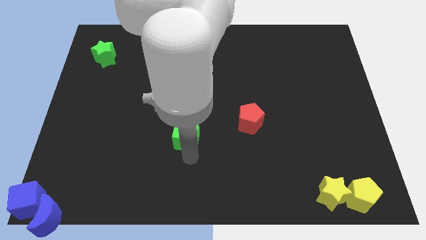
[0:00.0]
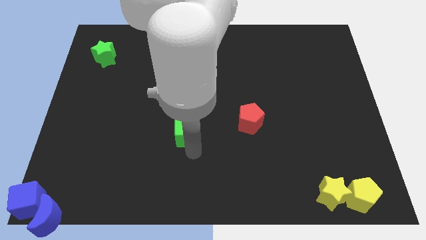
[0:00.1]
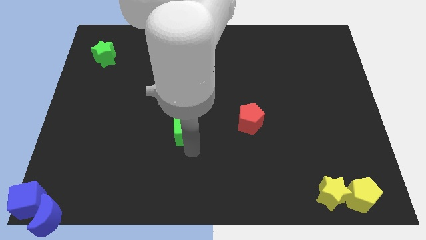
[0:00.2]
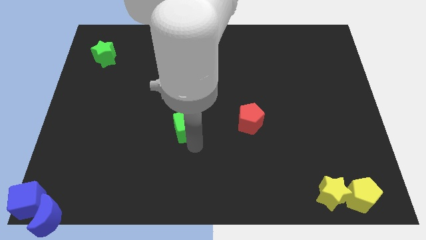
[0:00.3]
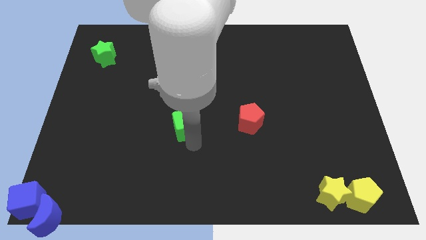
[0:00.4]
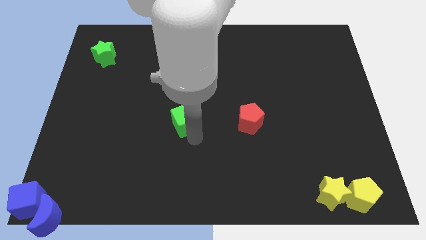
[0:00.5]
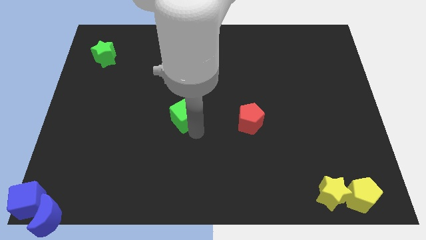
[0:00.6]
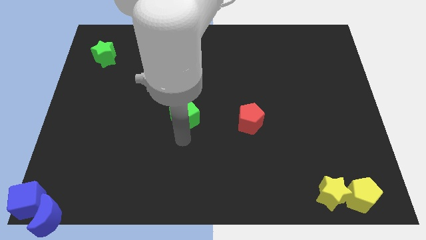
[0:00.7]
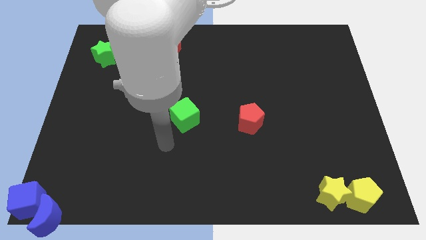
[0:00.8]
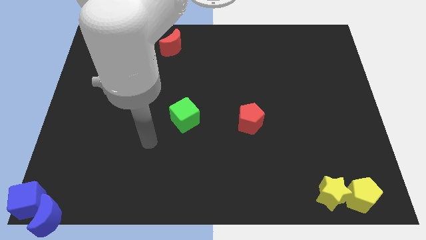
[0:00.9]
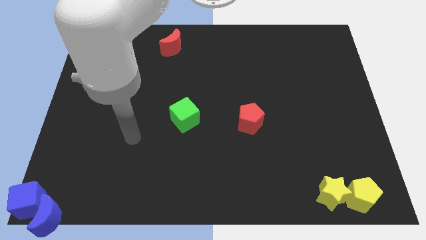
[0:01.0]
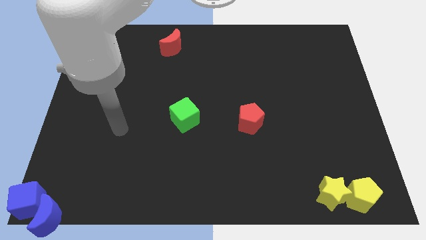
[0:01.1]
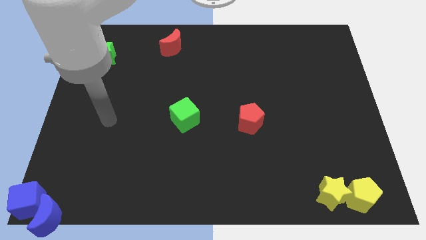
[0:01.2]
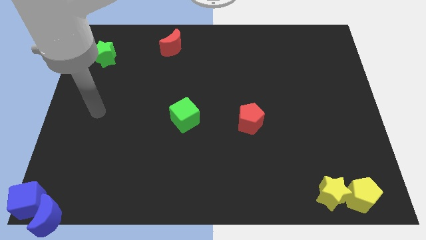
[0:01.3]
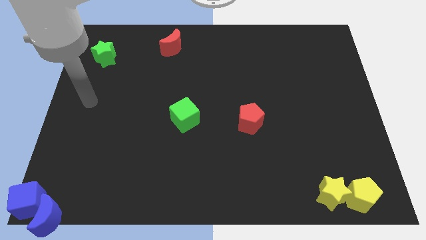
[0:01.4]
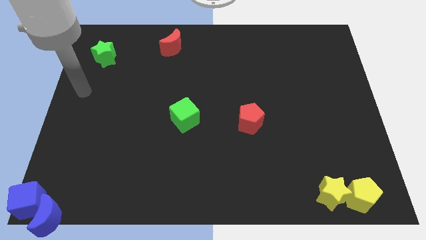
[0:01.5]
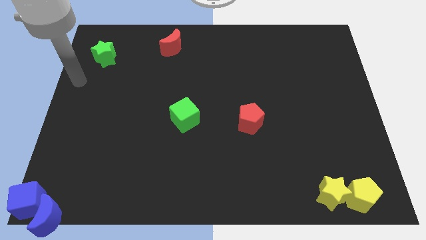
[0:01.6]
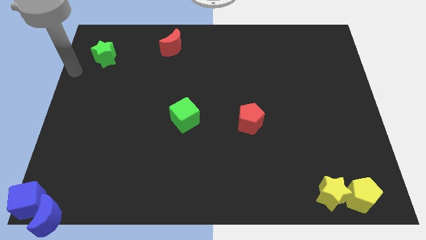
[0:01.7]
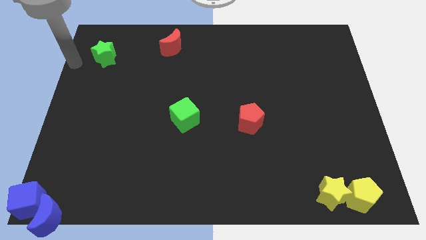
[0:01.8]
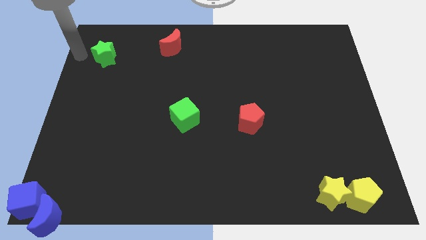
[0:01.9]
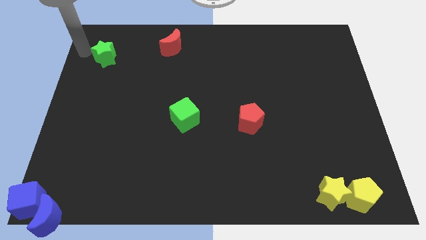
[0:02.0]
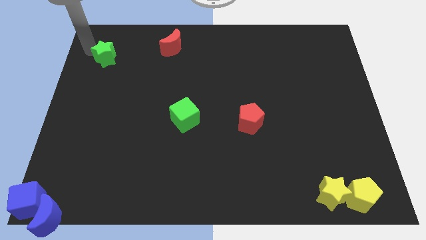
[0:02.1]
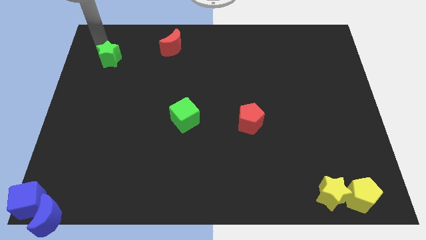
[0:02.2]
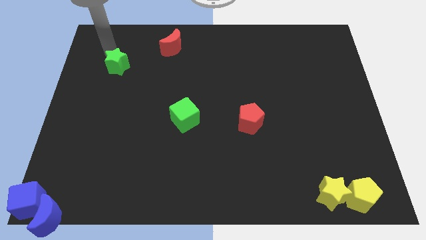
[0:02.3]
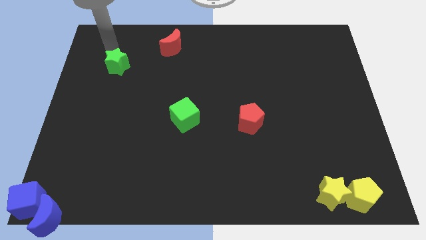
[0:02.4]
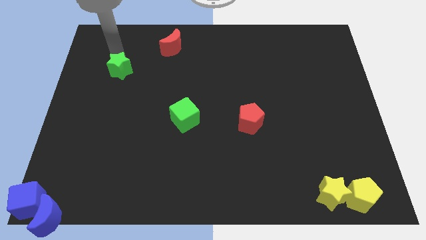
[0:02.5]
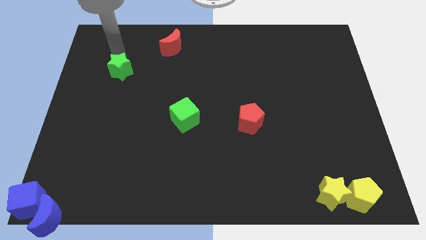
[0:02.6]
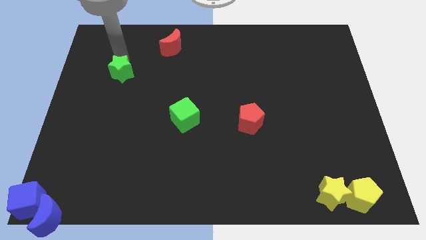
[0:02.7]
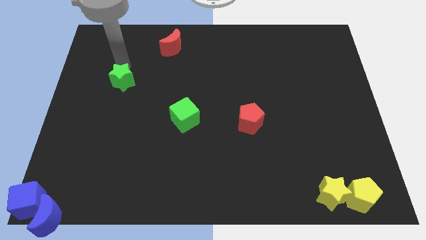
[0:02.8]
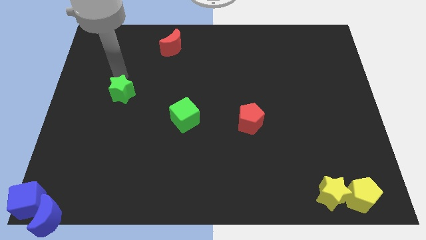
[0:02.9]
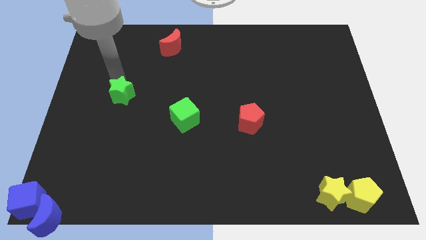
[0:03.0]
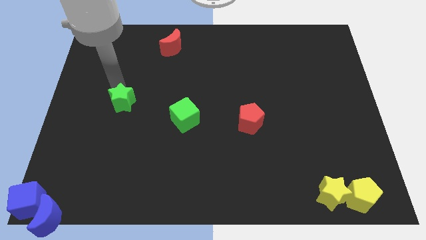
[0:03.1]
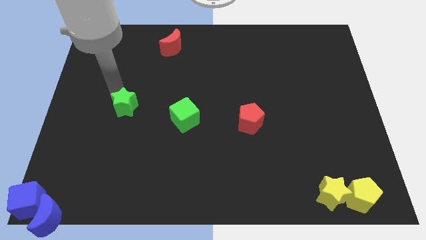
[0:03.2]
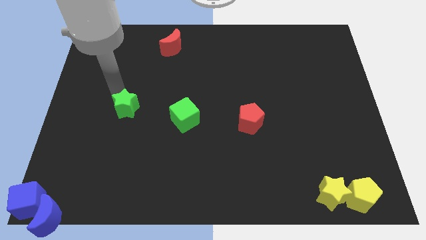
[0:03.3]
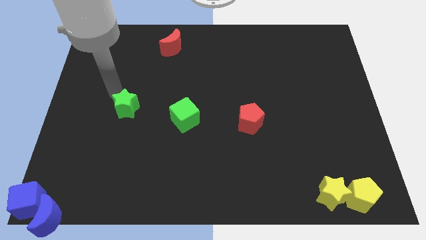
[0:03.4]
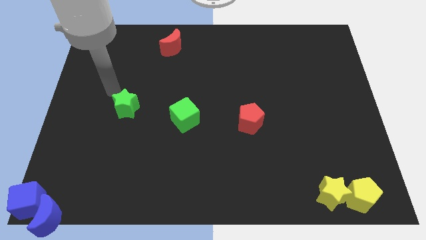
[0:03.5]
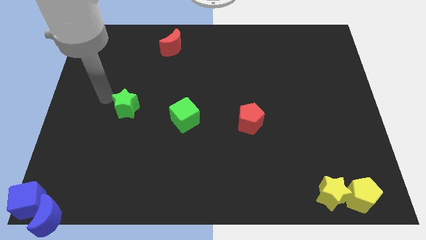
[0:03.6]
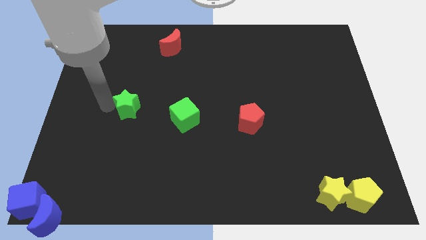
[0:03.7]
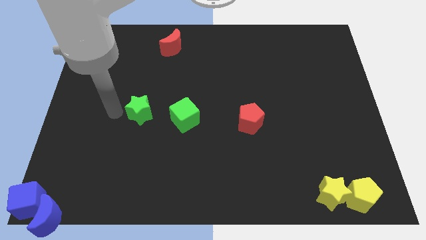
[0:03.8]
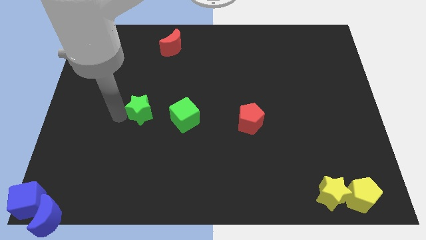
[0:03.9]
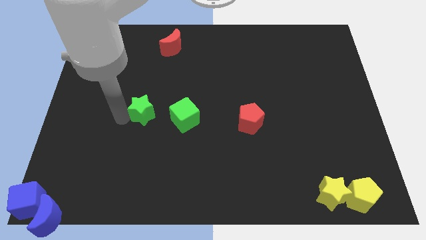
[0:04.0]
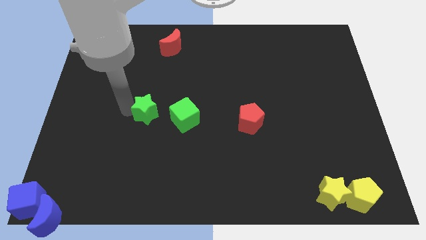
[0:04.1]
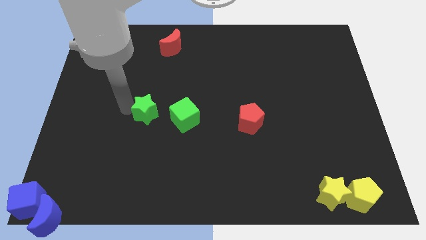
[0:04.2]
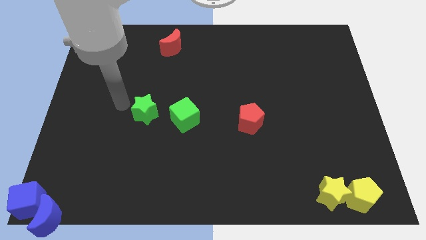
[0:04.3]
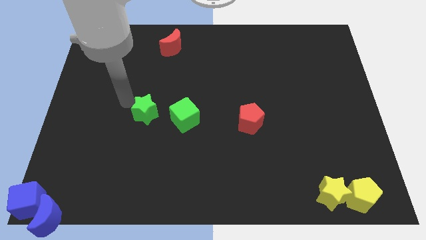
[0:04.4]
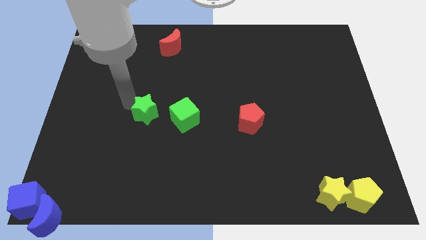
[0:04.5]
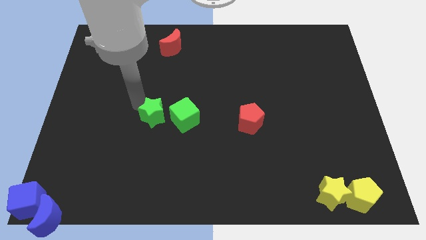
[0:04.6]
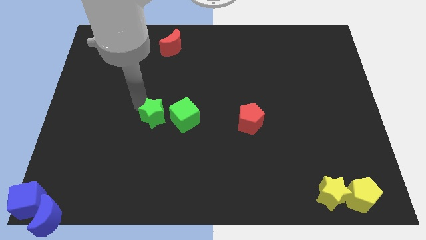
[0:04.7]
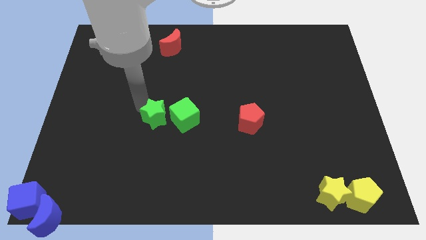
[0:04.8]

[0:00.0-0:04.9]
place the green blocks at the center of the board

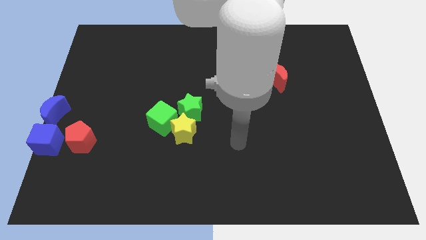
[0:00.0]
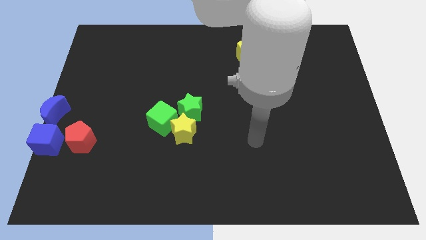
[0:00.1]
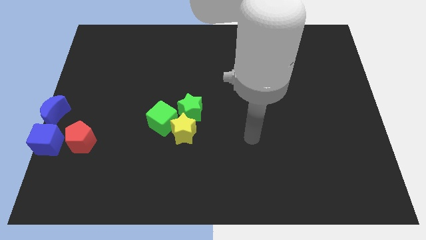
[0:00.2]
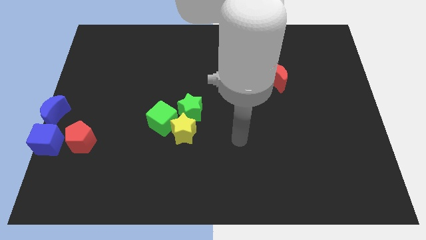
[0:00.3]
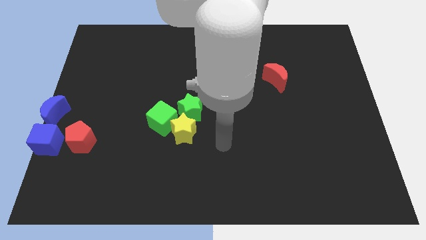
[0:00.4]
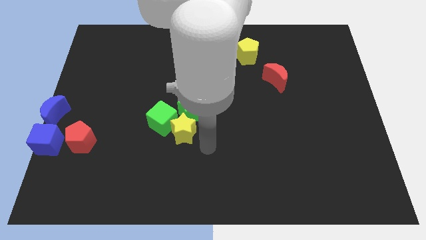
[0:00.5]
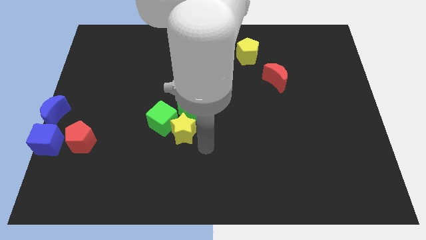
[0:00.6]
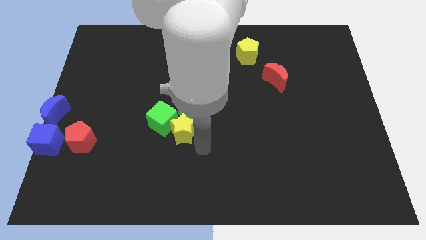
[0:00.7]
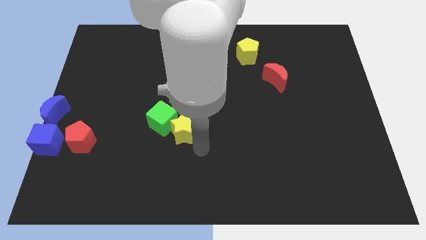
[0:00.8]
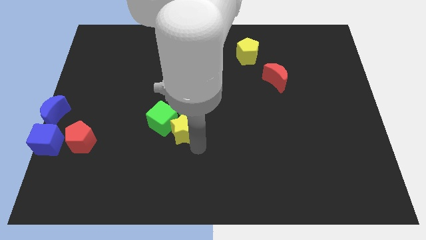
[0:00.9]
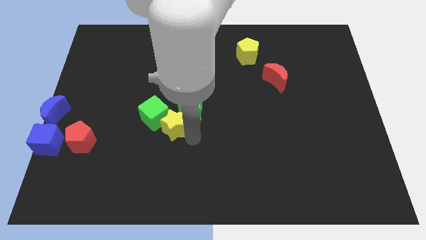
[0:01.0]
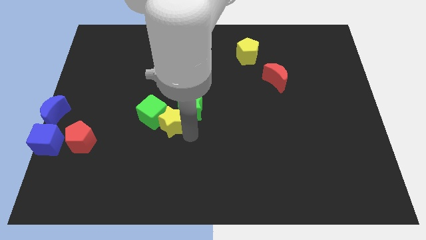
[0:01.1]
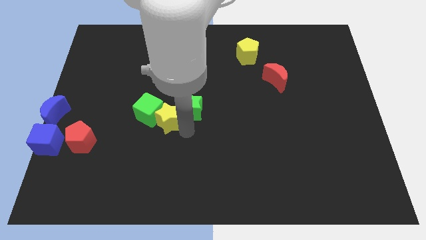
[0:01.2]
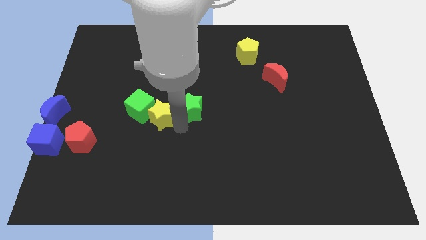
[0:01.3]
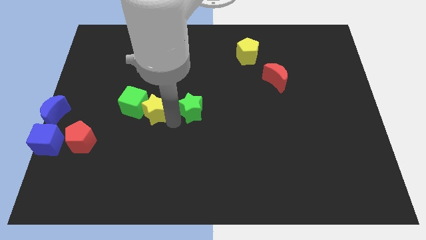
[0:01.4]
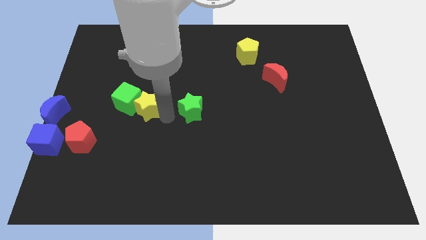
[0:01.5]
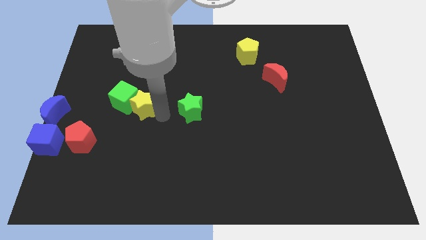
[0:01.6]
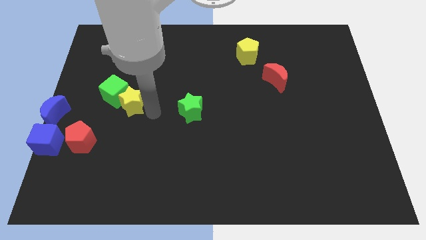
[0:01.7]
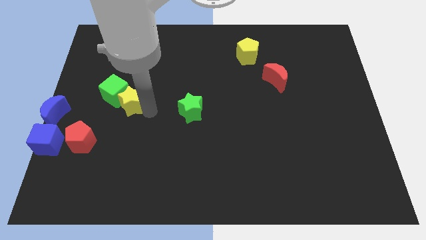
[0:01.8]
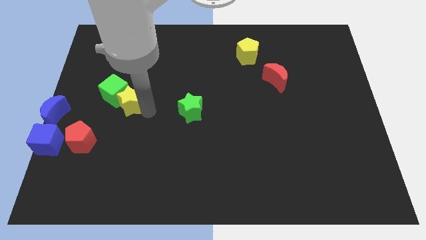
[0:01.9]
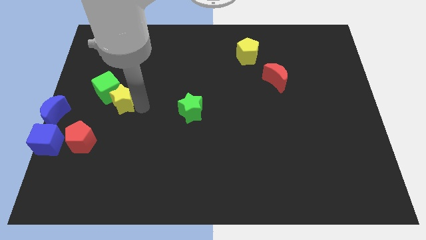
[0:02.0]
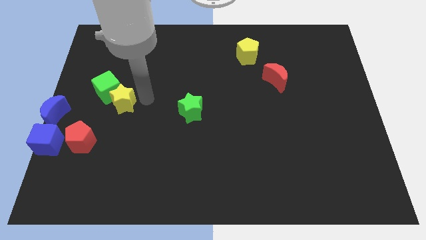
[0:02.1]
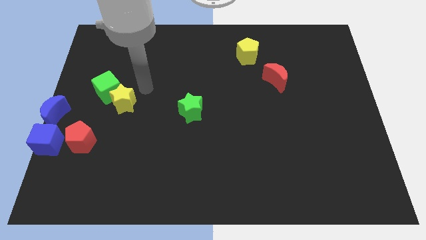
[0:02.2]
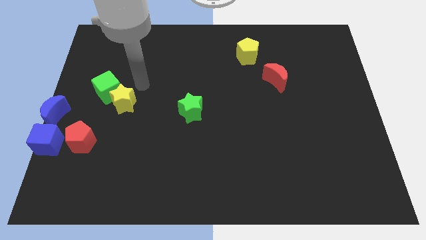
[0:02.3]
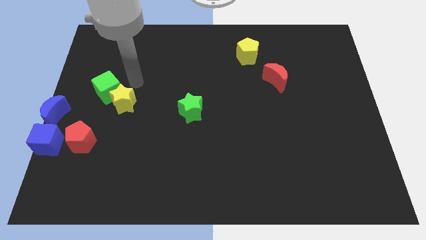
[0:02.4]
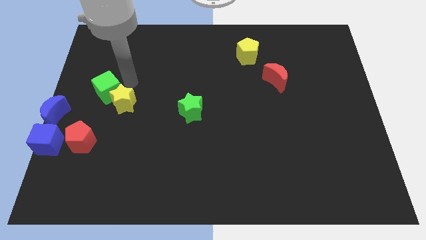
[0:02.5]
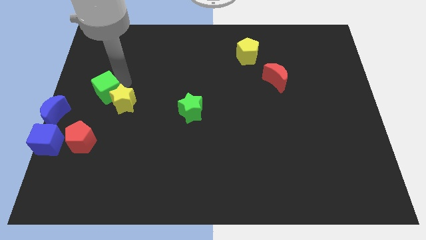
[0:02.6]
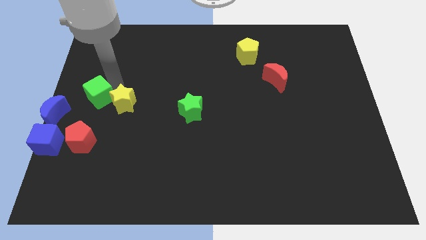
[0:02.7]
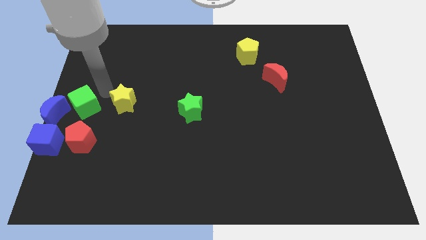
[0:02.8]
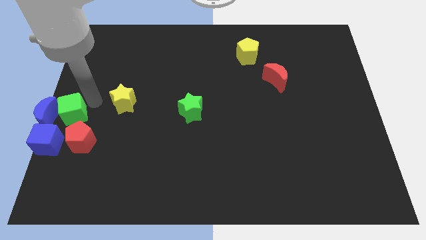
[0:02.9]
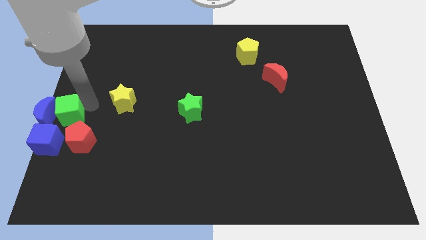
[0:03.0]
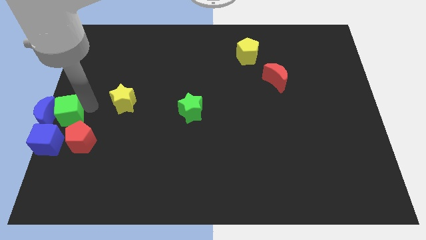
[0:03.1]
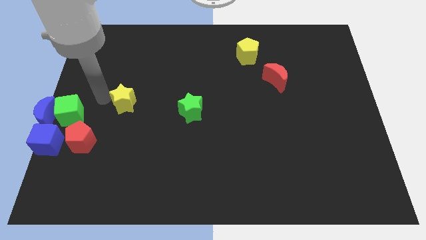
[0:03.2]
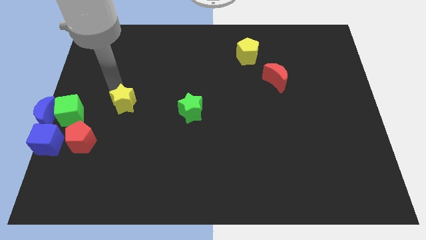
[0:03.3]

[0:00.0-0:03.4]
separate green cube and the green star from the yellow star

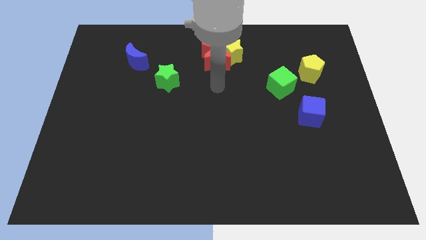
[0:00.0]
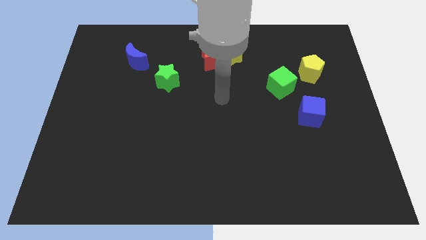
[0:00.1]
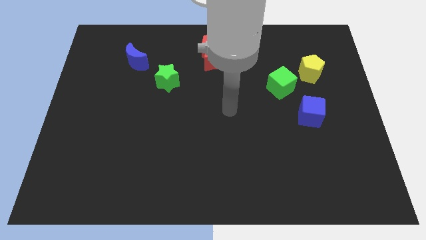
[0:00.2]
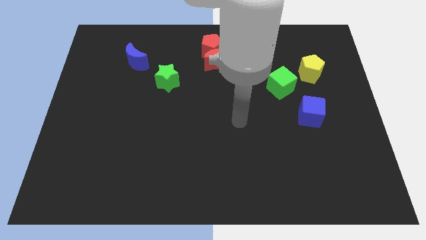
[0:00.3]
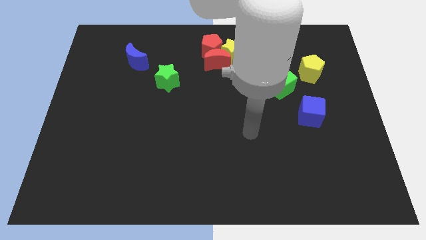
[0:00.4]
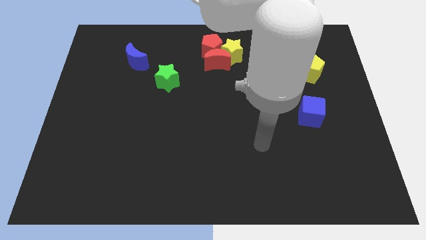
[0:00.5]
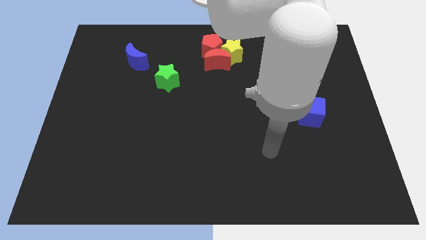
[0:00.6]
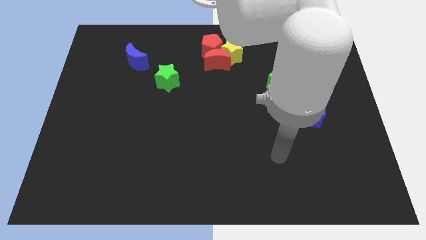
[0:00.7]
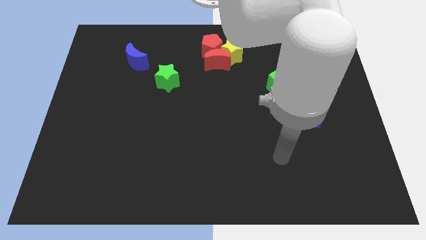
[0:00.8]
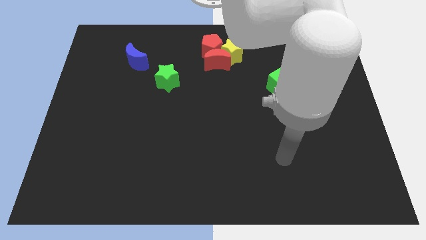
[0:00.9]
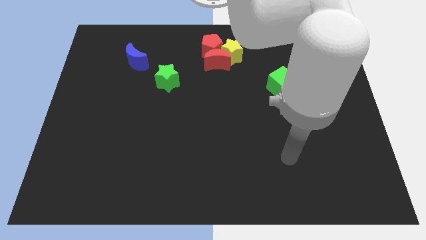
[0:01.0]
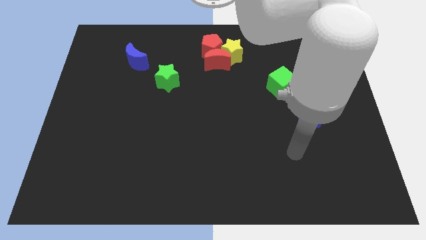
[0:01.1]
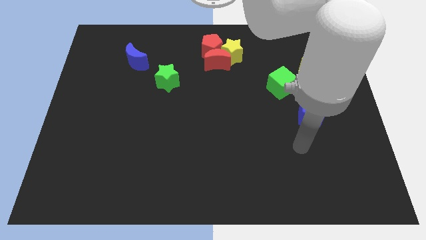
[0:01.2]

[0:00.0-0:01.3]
move your hand to the bottom left of the blue cube
